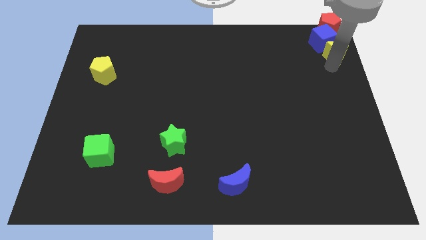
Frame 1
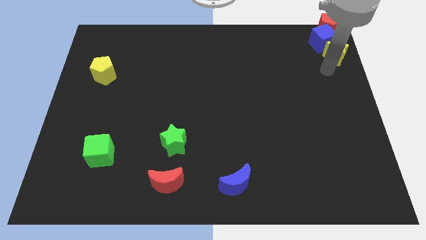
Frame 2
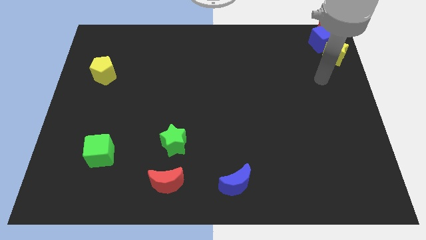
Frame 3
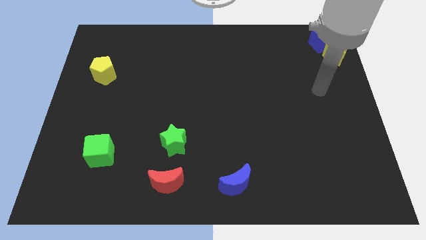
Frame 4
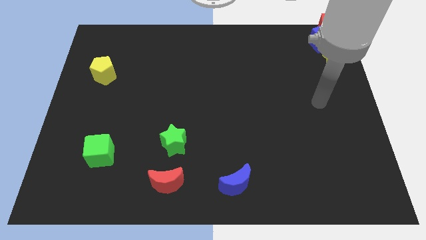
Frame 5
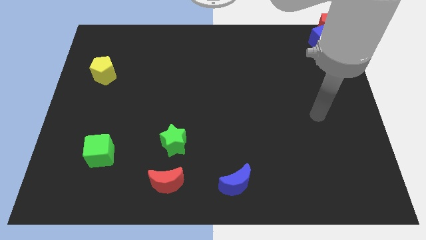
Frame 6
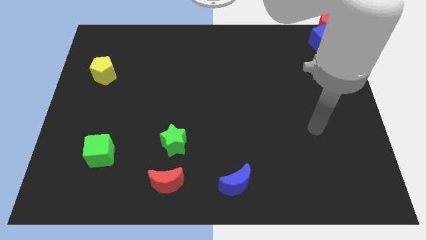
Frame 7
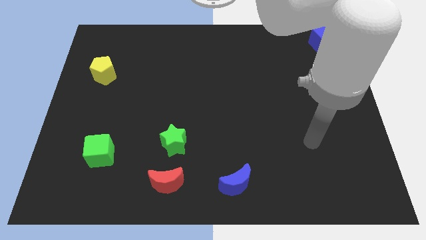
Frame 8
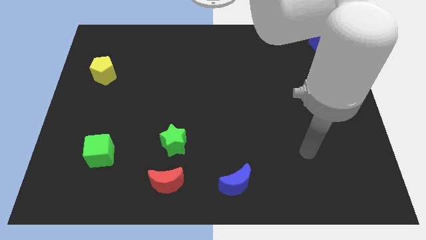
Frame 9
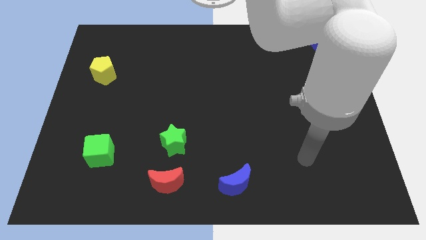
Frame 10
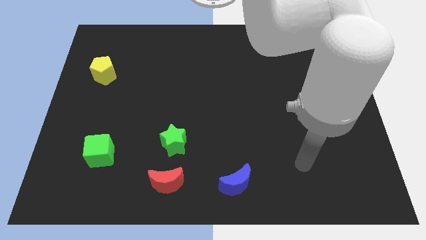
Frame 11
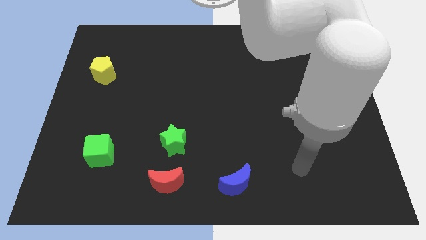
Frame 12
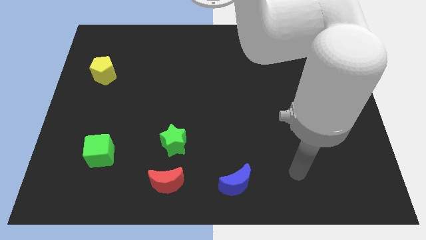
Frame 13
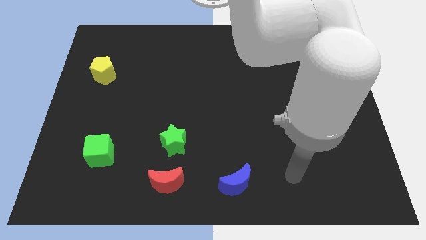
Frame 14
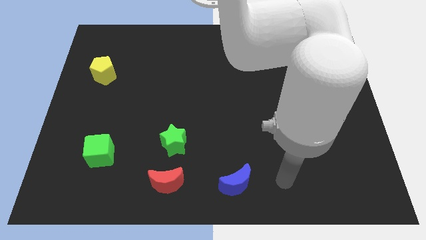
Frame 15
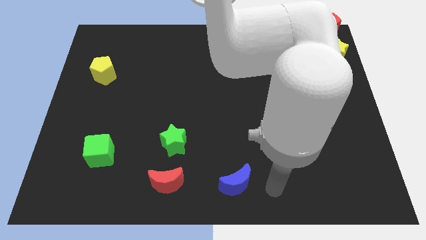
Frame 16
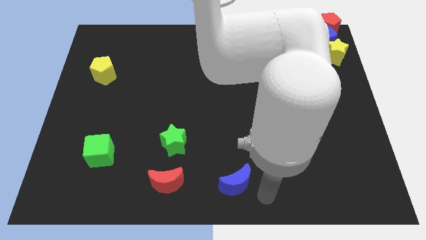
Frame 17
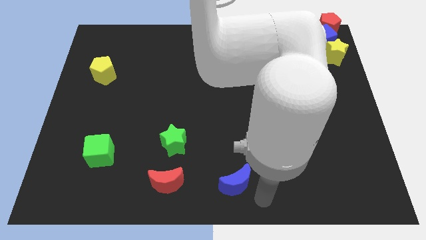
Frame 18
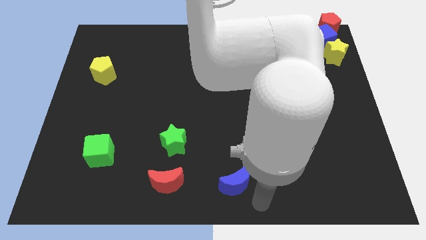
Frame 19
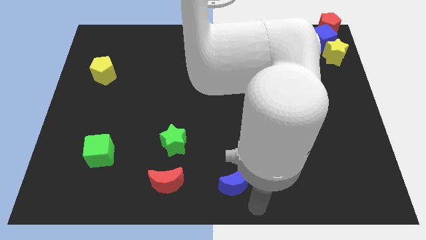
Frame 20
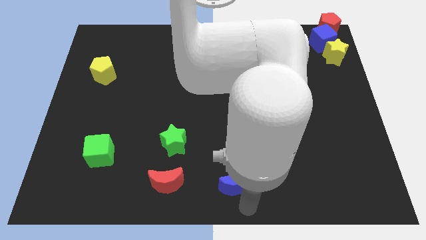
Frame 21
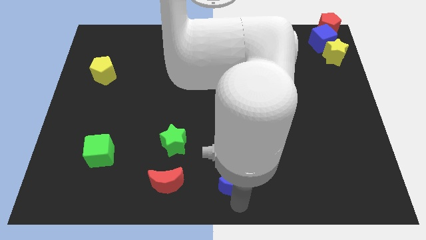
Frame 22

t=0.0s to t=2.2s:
point your arm at the bottom of the blue crescent

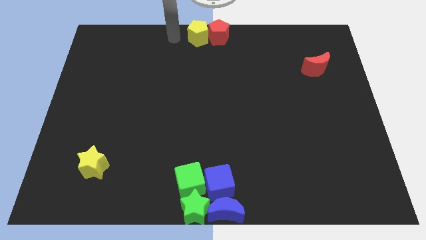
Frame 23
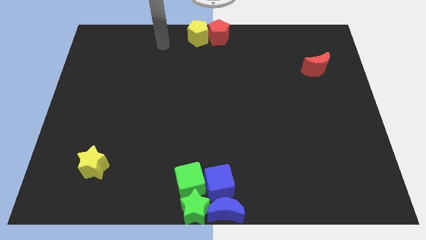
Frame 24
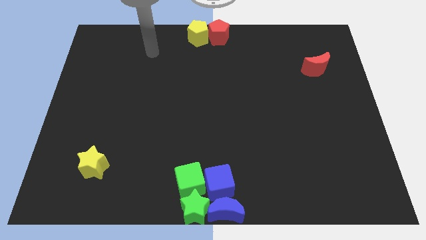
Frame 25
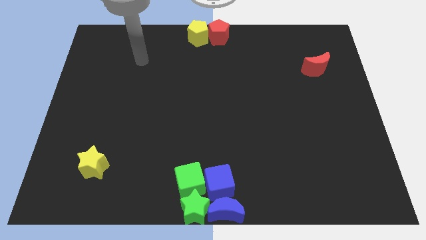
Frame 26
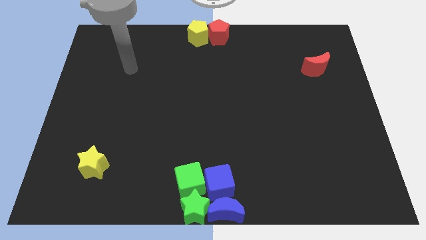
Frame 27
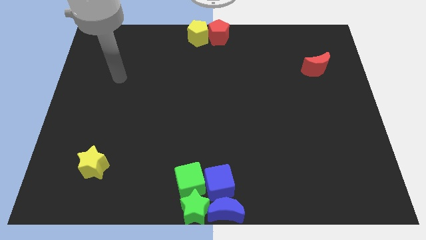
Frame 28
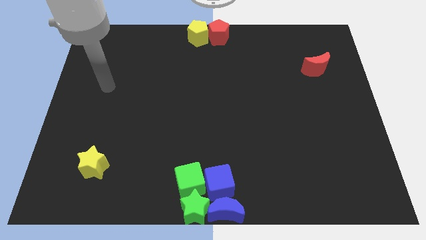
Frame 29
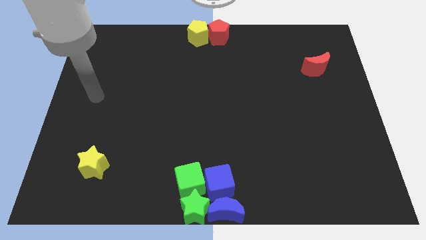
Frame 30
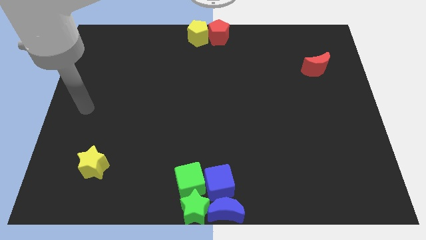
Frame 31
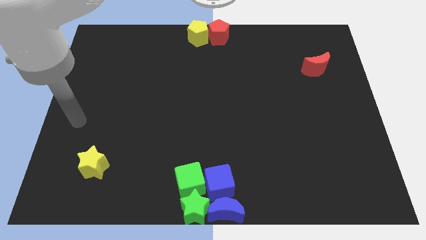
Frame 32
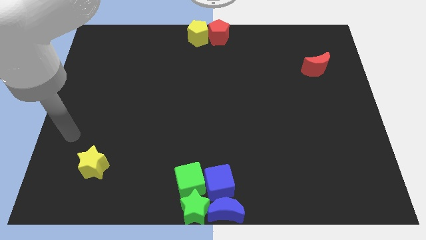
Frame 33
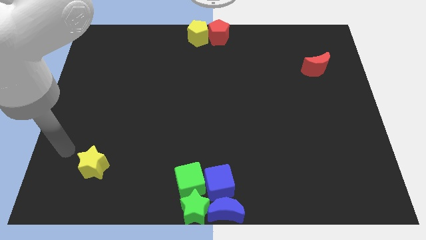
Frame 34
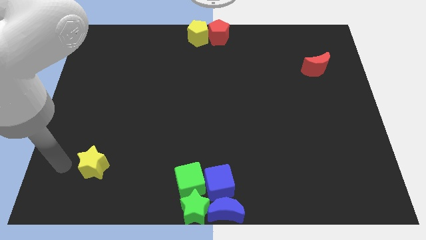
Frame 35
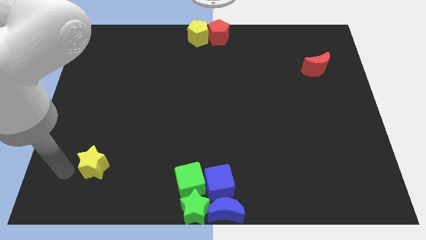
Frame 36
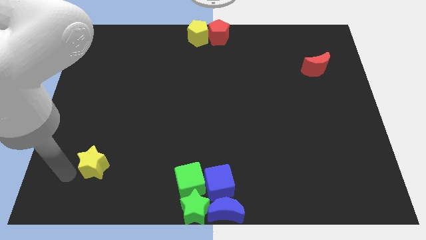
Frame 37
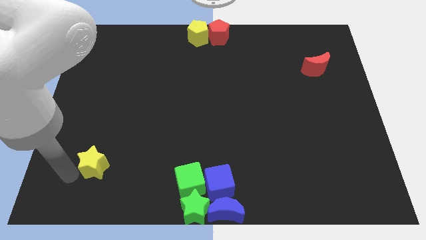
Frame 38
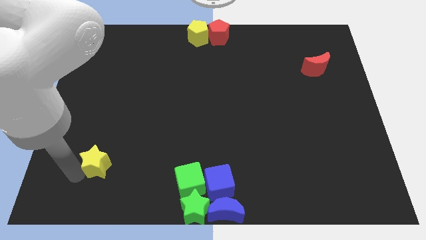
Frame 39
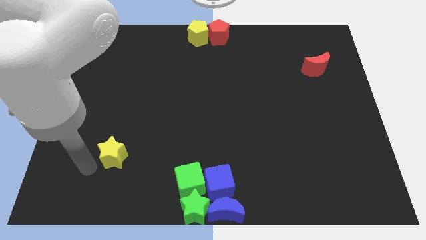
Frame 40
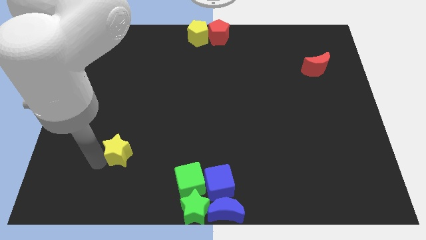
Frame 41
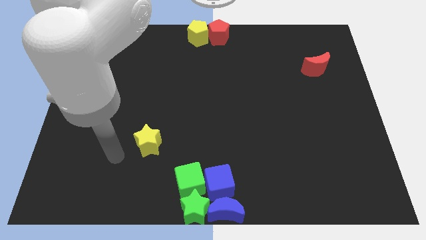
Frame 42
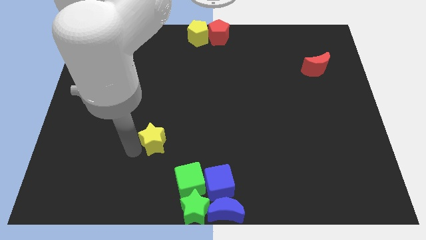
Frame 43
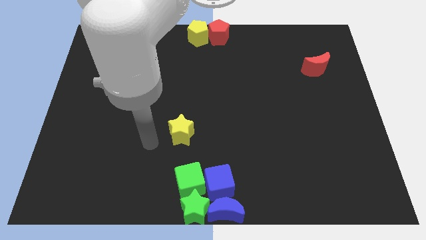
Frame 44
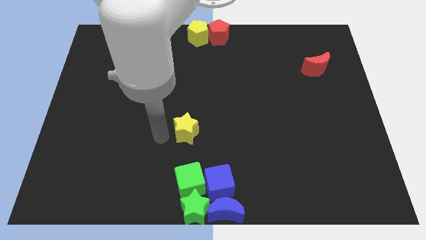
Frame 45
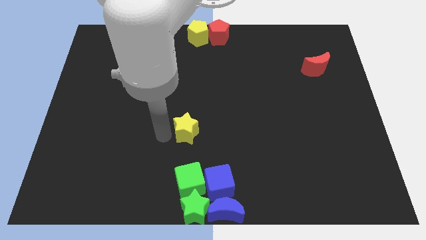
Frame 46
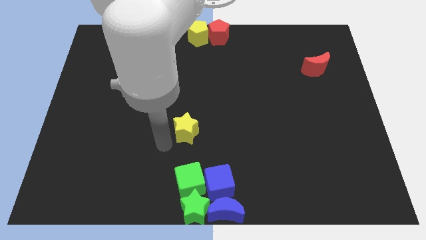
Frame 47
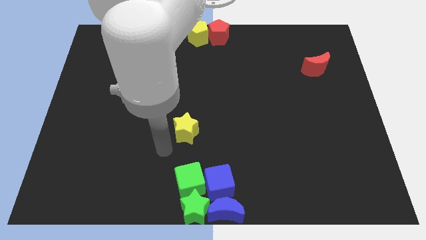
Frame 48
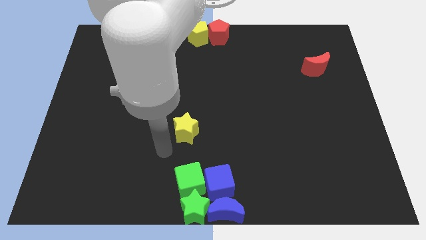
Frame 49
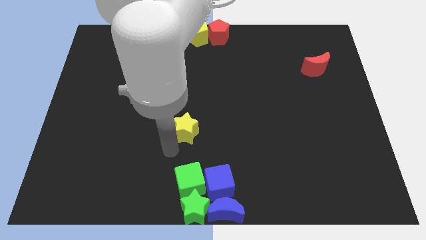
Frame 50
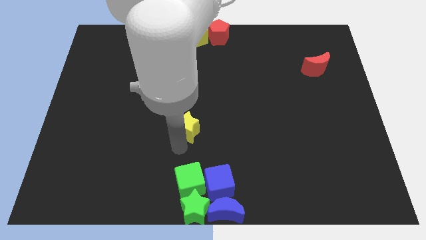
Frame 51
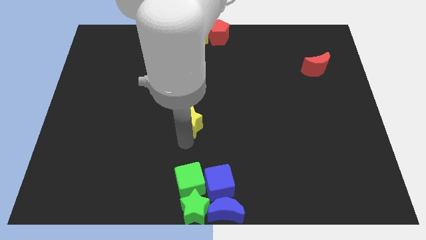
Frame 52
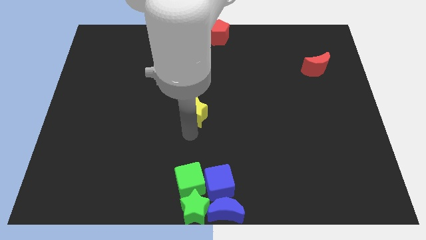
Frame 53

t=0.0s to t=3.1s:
push the yellow star towards the center of the board

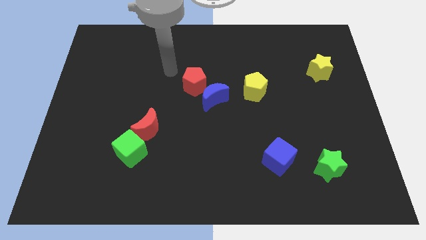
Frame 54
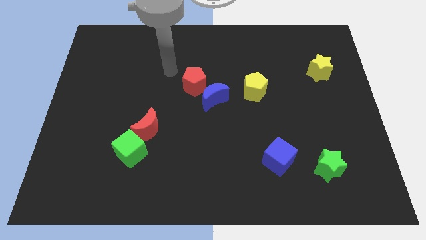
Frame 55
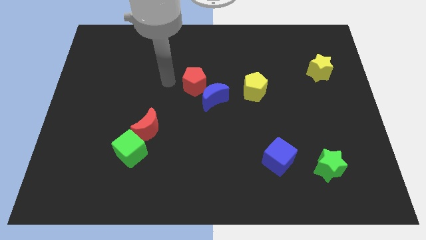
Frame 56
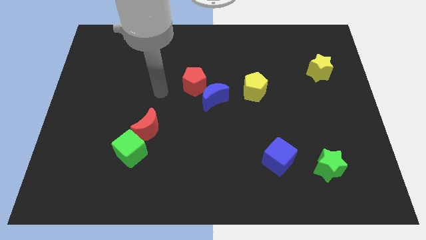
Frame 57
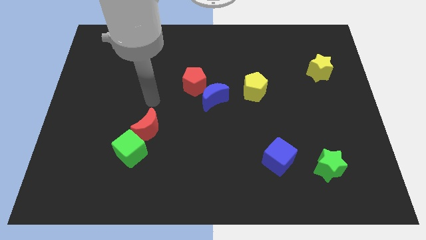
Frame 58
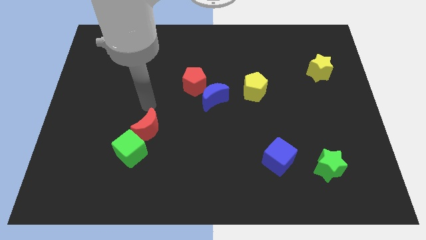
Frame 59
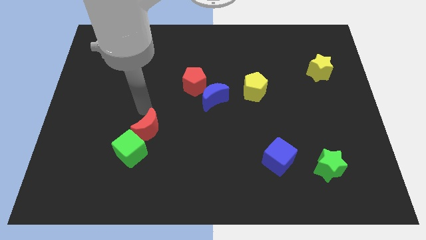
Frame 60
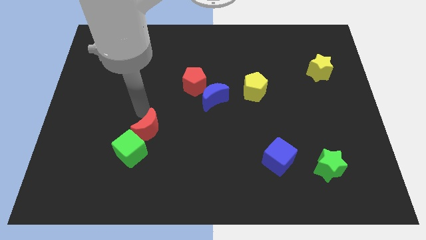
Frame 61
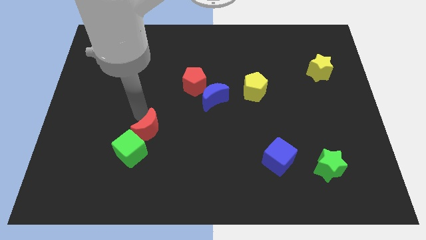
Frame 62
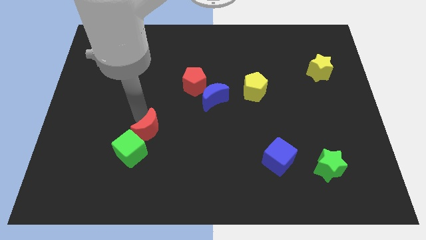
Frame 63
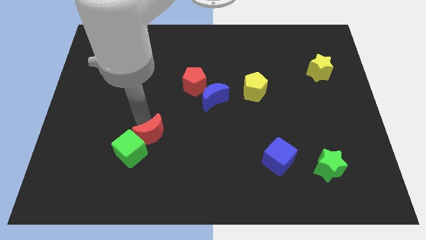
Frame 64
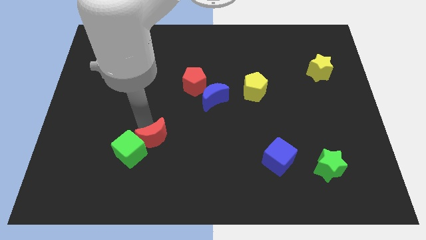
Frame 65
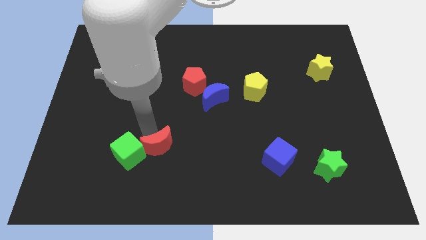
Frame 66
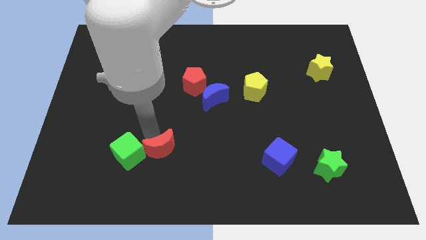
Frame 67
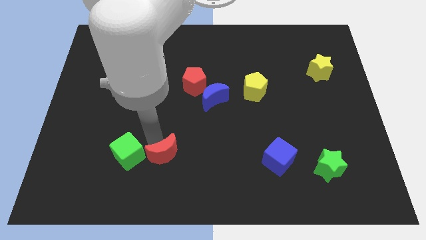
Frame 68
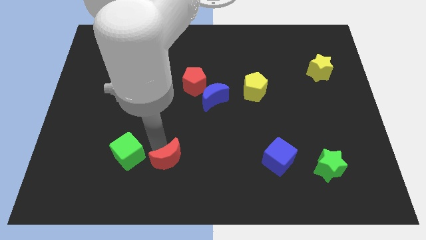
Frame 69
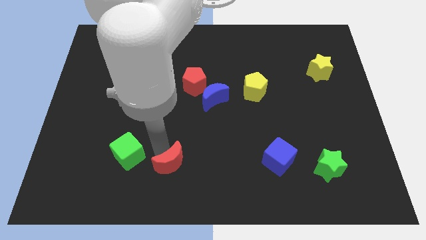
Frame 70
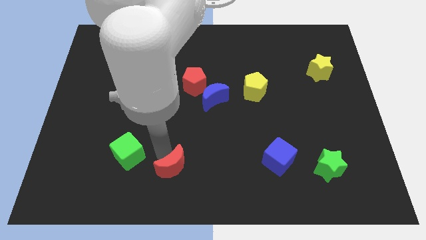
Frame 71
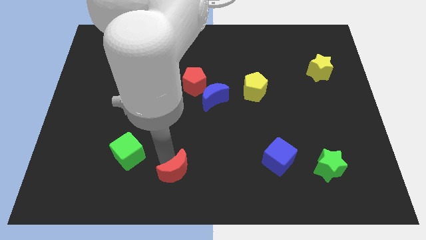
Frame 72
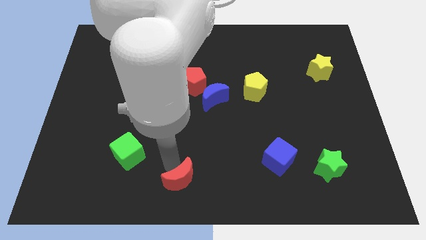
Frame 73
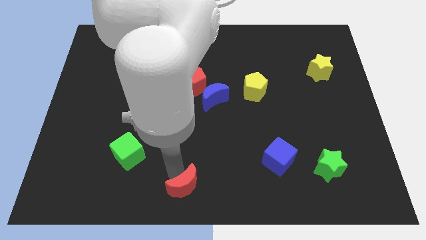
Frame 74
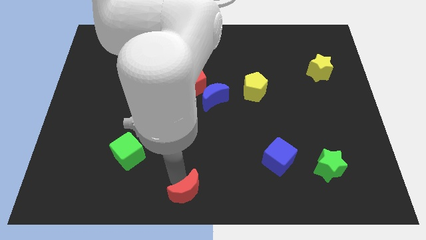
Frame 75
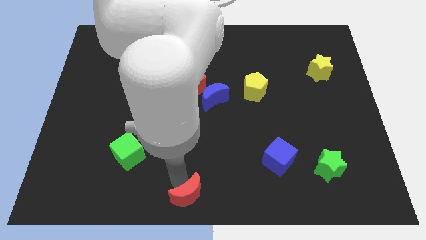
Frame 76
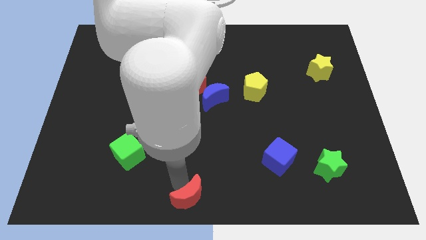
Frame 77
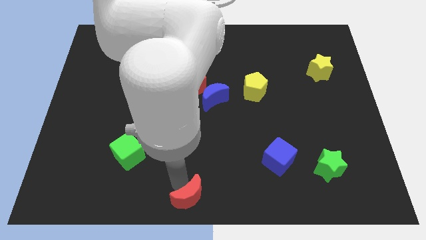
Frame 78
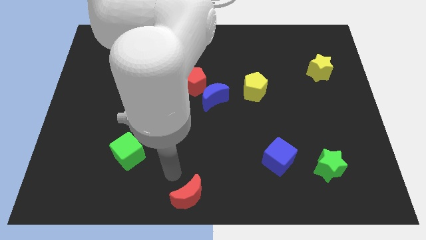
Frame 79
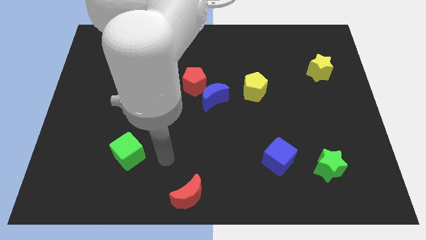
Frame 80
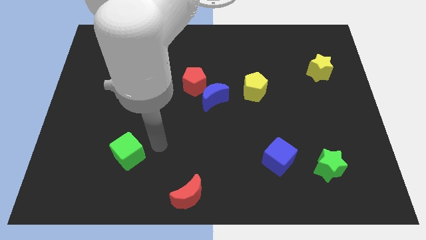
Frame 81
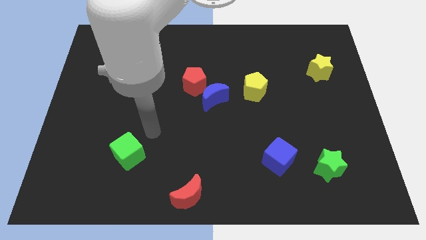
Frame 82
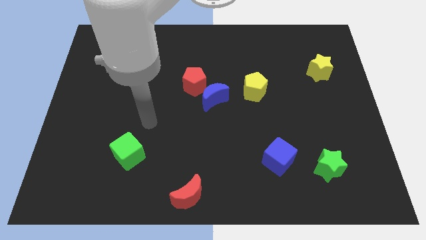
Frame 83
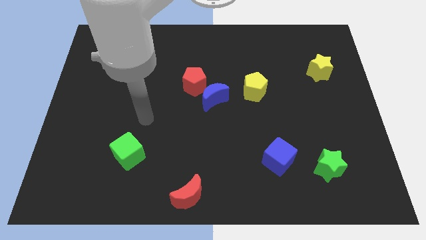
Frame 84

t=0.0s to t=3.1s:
separate red crescent from the green cube

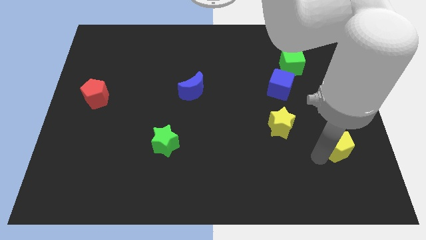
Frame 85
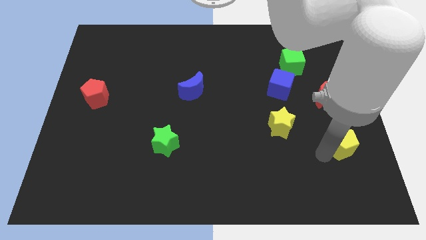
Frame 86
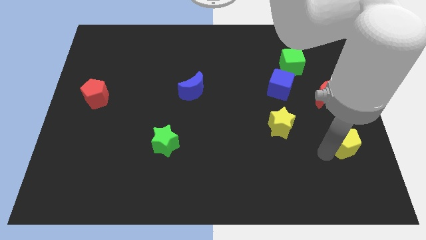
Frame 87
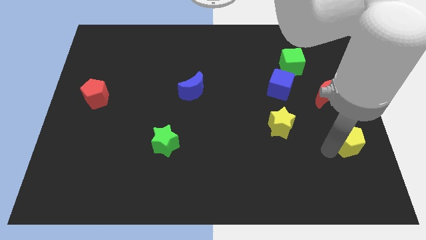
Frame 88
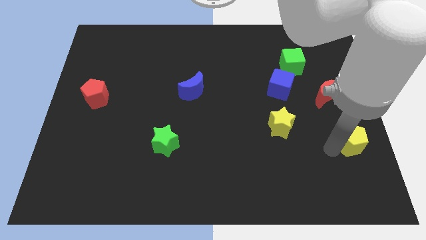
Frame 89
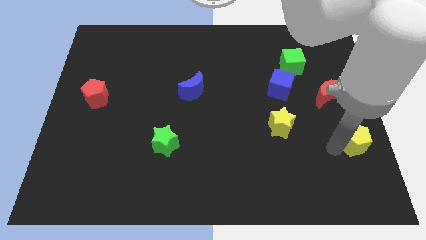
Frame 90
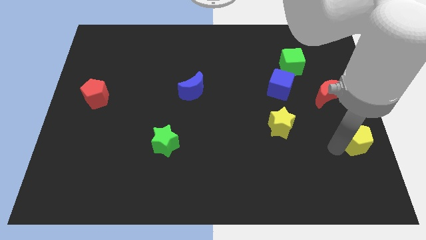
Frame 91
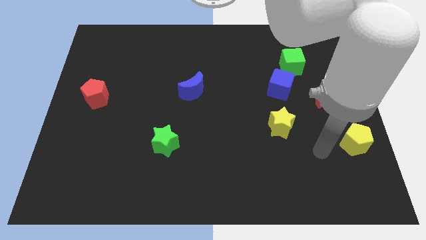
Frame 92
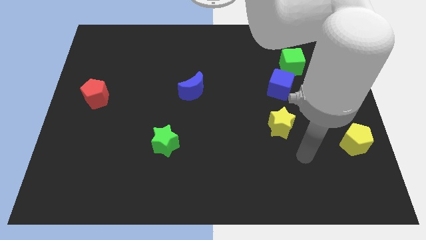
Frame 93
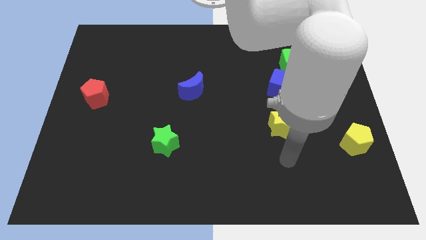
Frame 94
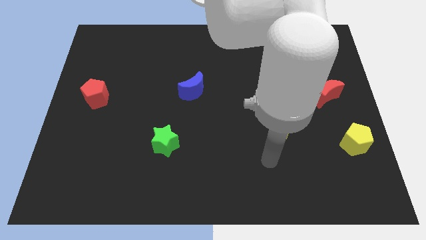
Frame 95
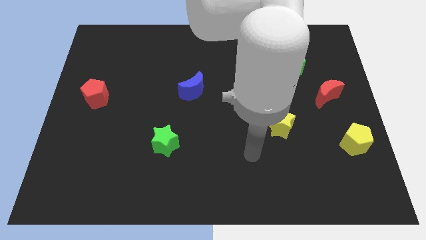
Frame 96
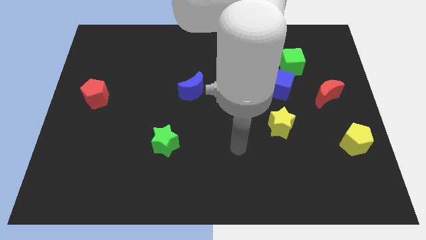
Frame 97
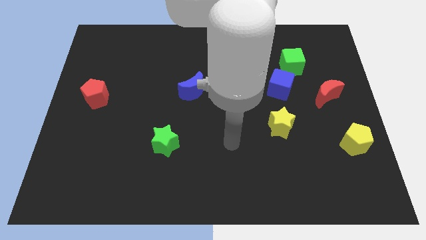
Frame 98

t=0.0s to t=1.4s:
push the yellow pentagon center right
